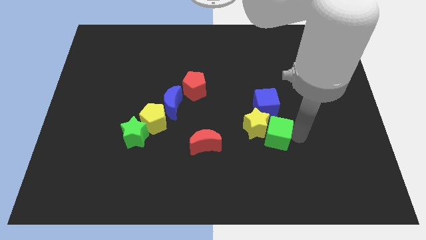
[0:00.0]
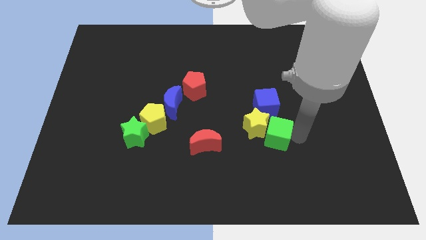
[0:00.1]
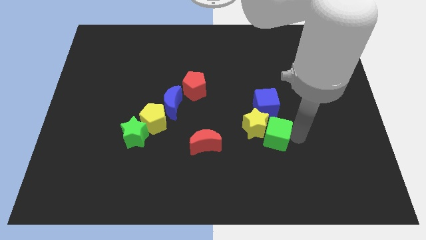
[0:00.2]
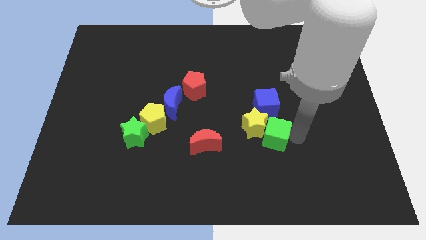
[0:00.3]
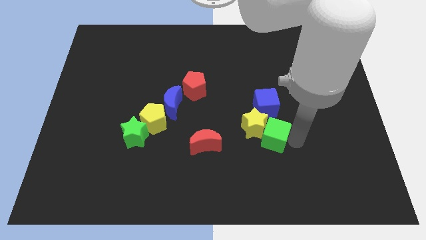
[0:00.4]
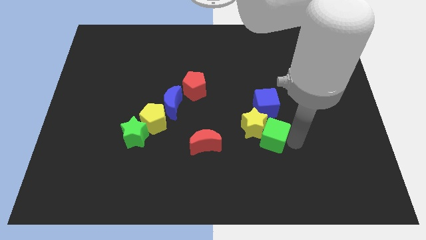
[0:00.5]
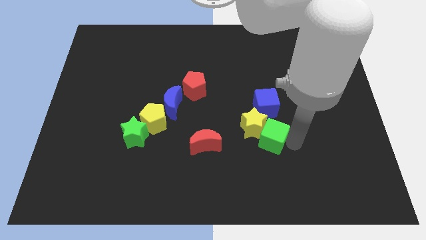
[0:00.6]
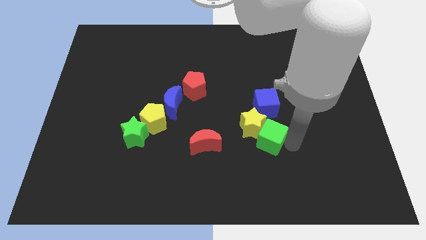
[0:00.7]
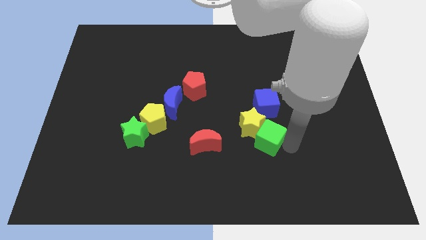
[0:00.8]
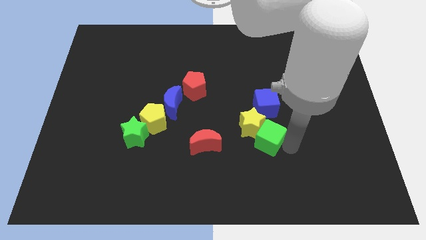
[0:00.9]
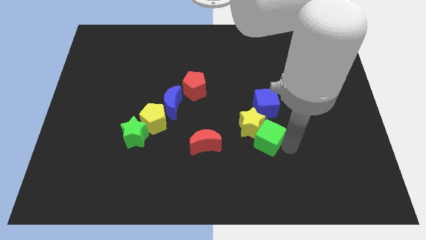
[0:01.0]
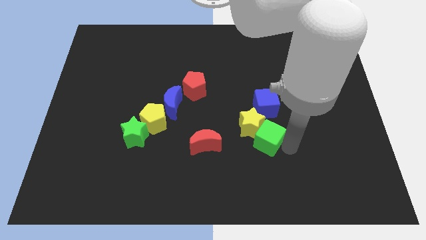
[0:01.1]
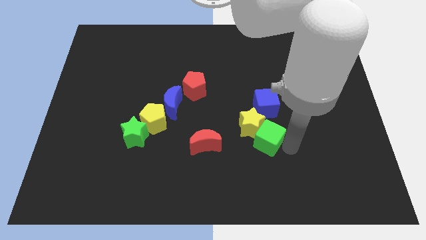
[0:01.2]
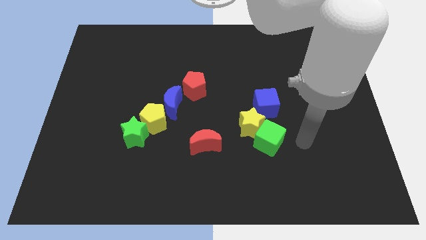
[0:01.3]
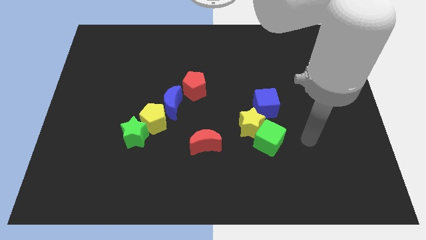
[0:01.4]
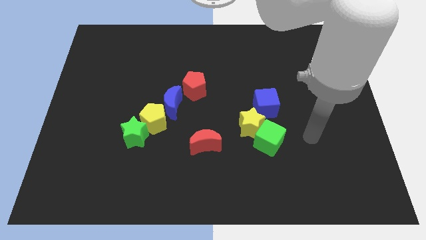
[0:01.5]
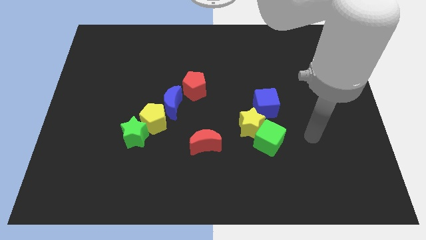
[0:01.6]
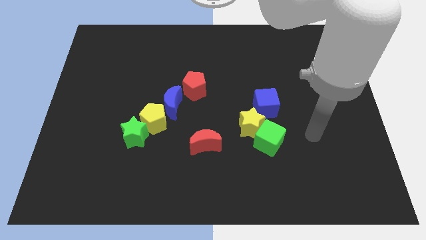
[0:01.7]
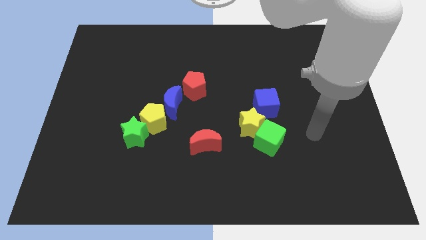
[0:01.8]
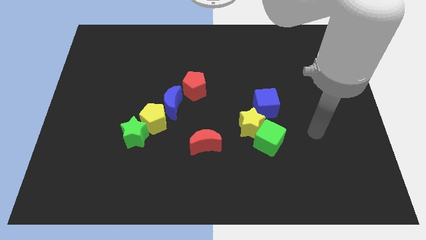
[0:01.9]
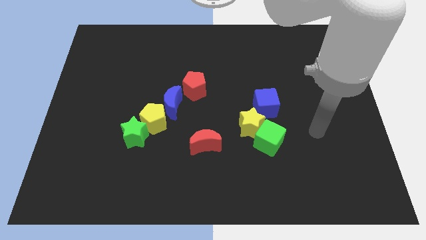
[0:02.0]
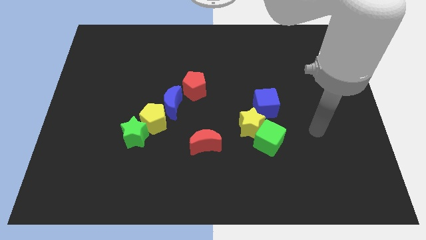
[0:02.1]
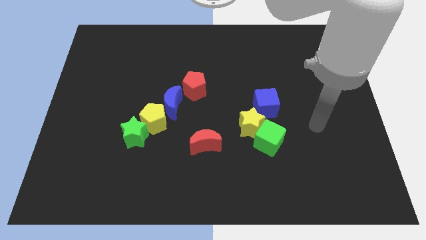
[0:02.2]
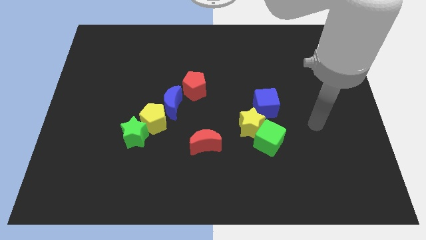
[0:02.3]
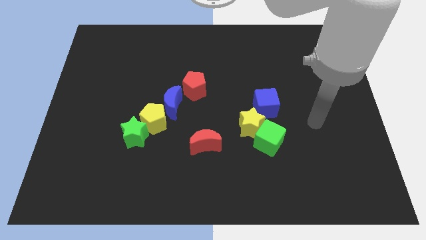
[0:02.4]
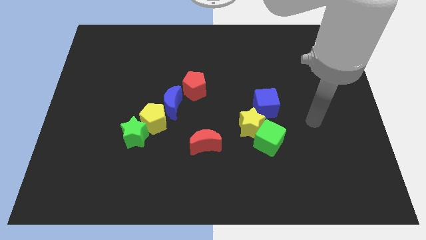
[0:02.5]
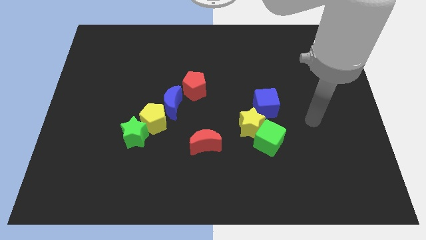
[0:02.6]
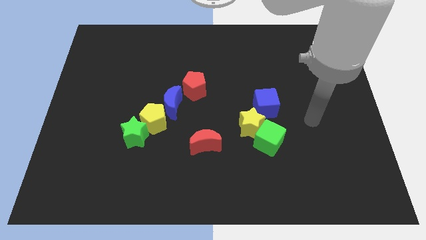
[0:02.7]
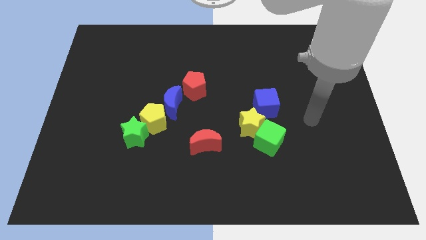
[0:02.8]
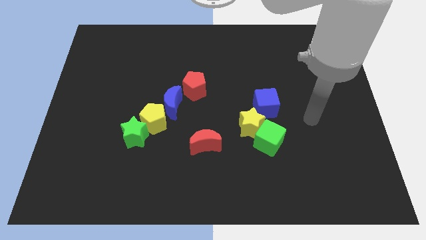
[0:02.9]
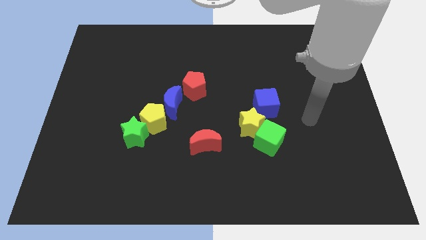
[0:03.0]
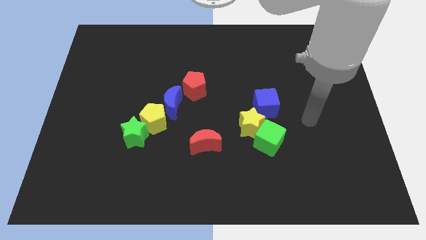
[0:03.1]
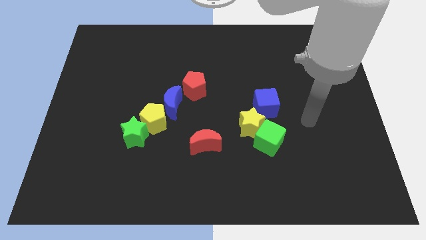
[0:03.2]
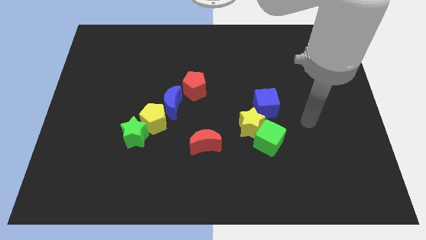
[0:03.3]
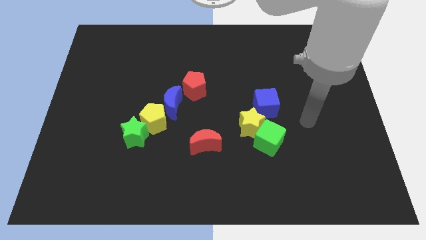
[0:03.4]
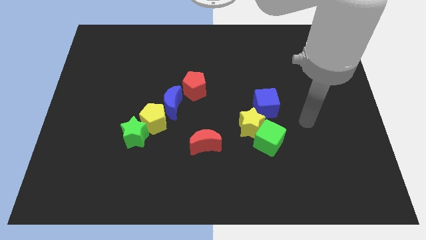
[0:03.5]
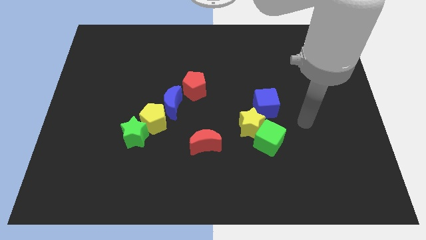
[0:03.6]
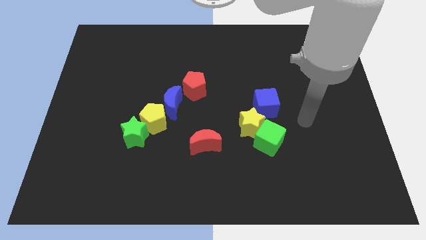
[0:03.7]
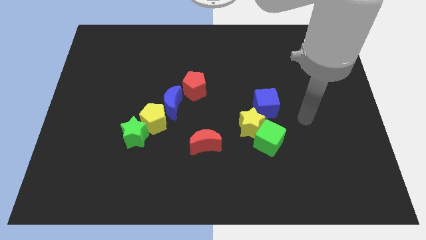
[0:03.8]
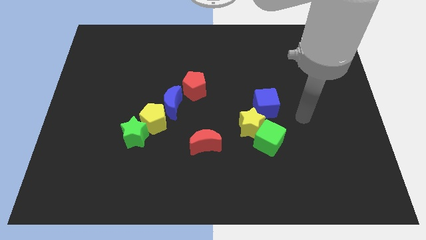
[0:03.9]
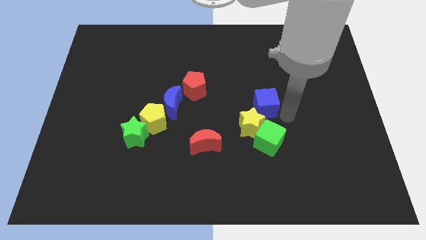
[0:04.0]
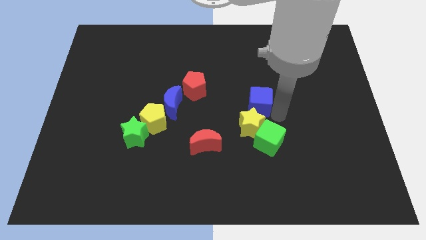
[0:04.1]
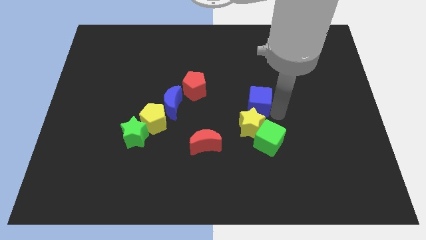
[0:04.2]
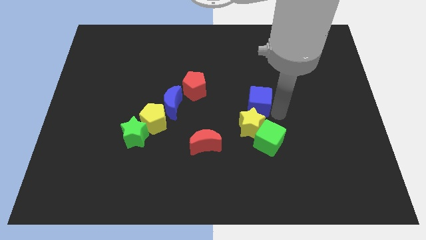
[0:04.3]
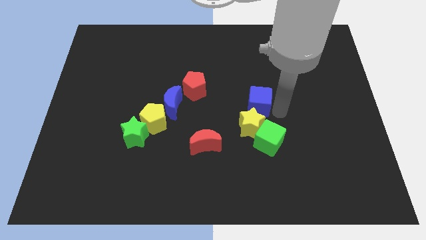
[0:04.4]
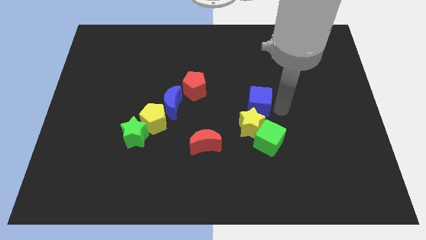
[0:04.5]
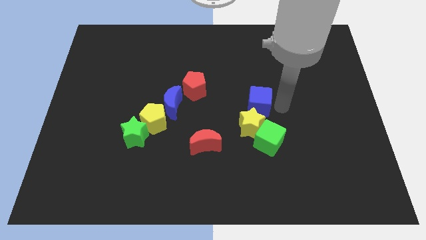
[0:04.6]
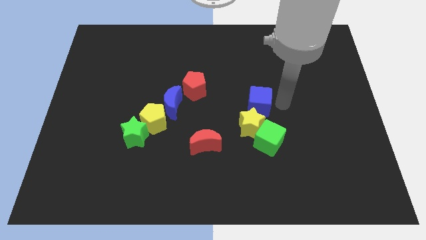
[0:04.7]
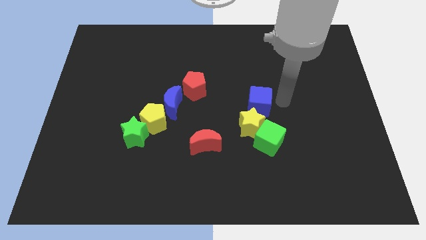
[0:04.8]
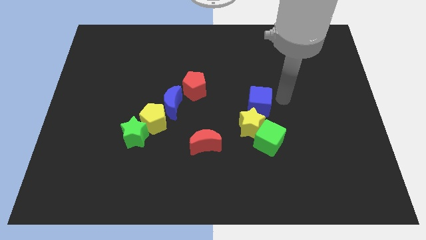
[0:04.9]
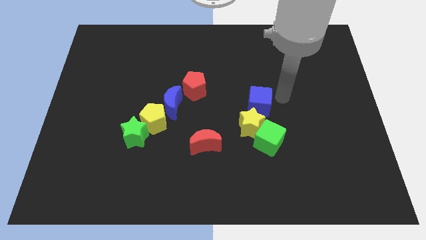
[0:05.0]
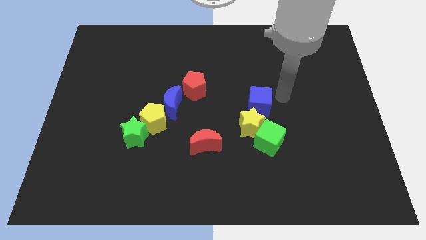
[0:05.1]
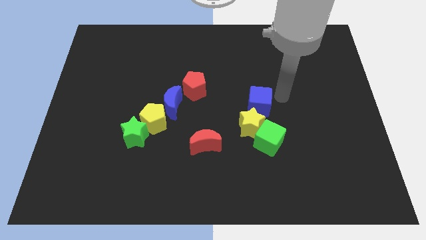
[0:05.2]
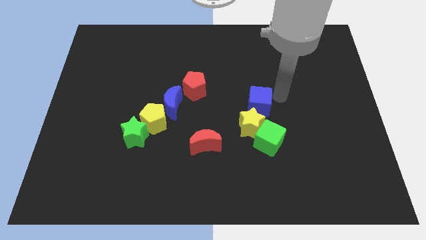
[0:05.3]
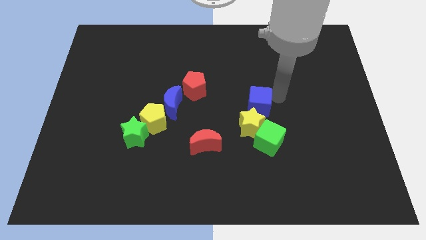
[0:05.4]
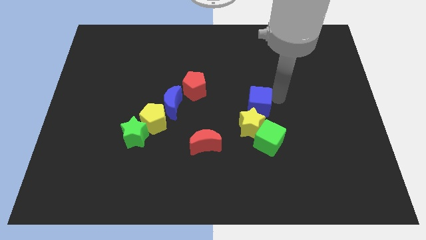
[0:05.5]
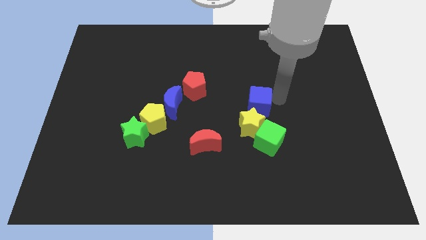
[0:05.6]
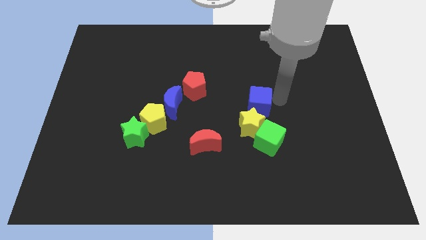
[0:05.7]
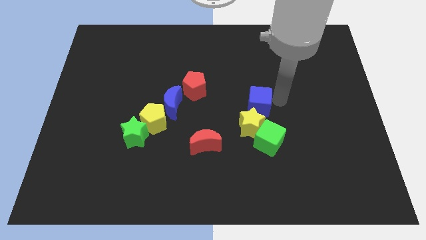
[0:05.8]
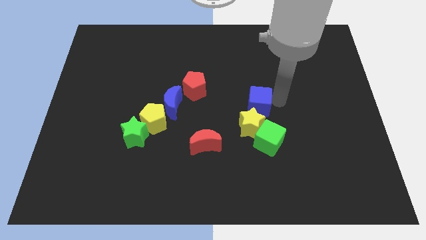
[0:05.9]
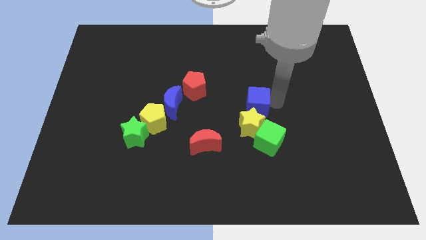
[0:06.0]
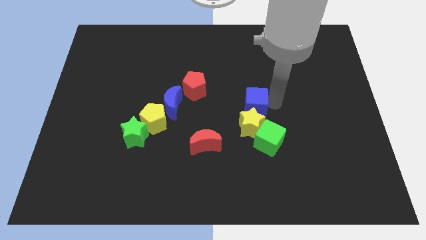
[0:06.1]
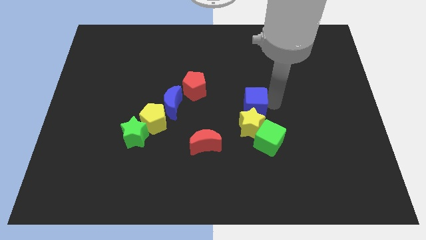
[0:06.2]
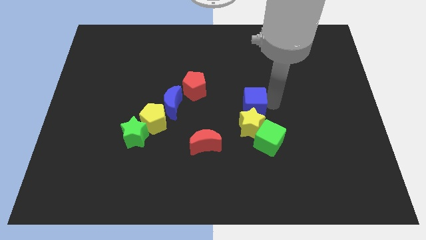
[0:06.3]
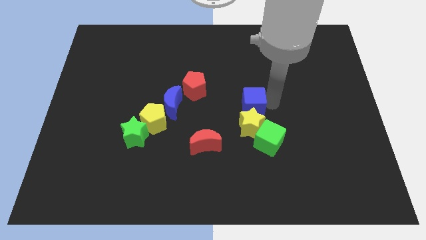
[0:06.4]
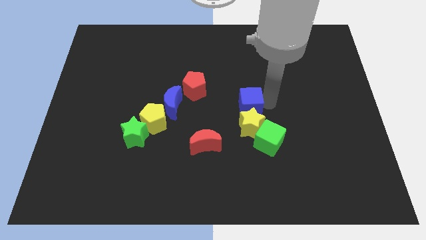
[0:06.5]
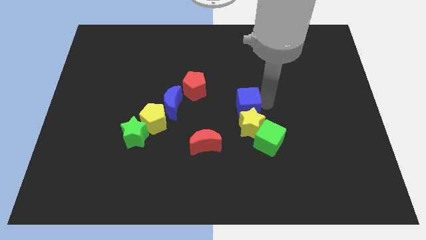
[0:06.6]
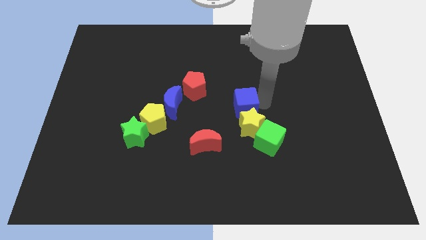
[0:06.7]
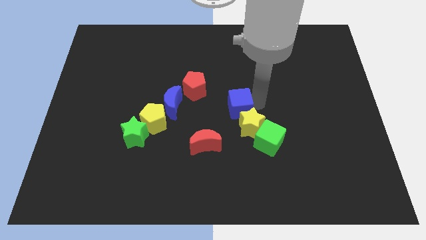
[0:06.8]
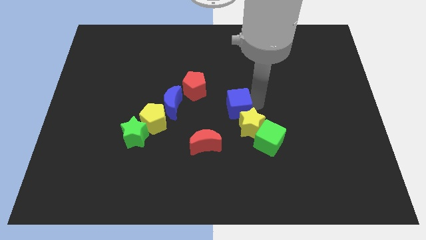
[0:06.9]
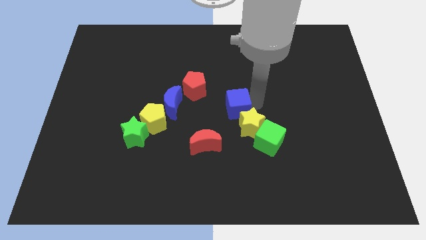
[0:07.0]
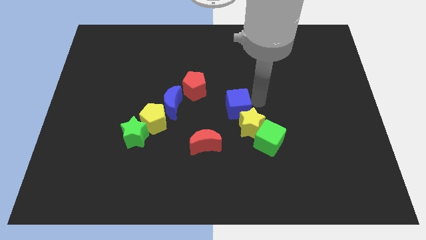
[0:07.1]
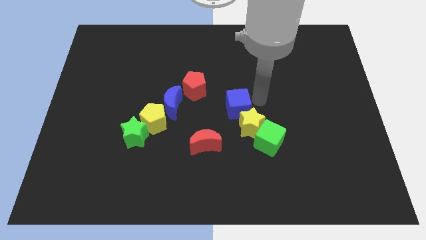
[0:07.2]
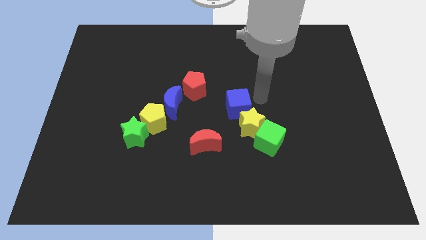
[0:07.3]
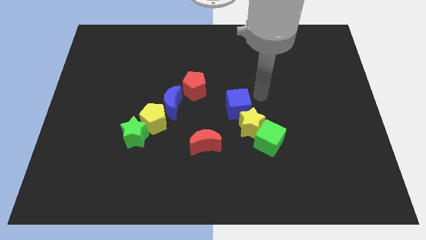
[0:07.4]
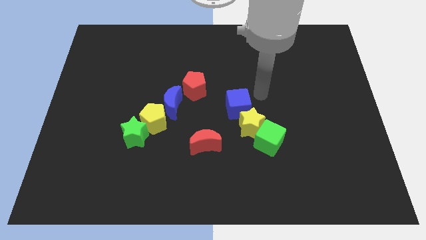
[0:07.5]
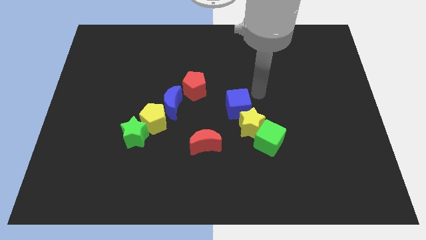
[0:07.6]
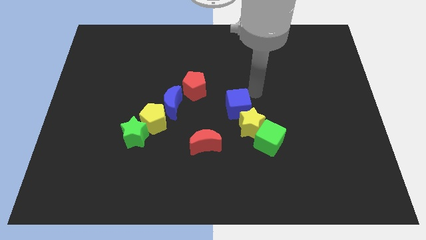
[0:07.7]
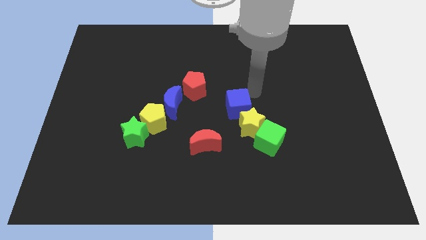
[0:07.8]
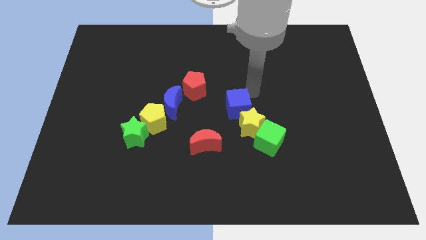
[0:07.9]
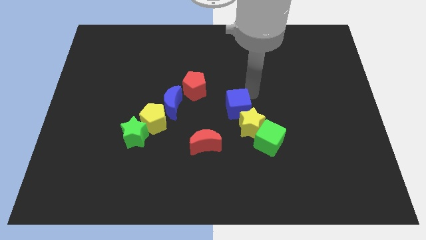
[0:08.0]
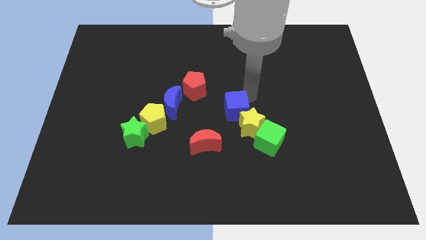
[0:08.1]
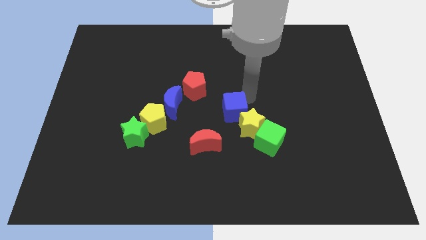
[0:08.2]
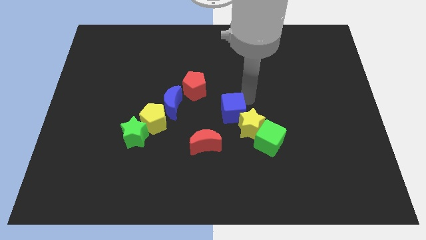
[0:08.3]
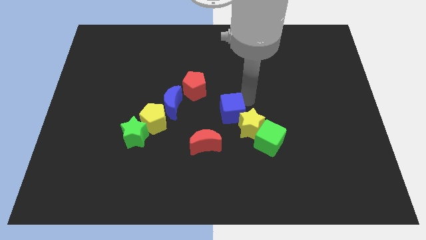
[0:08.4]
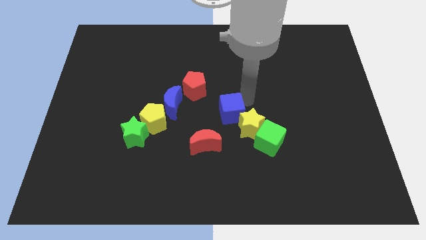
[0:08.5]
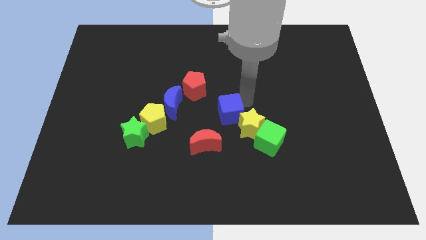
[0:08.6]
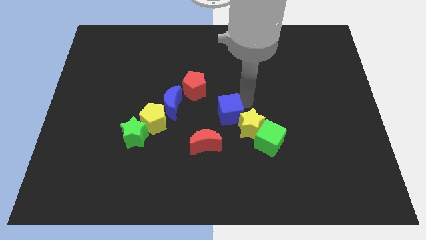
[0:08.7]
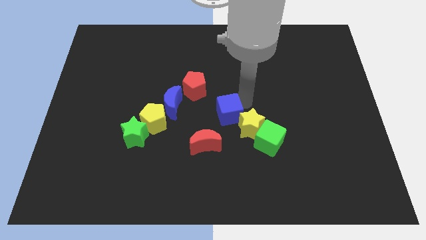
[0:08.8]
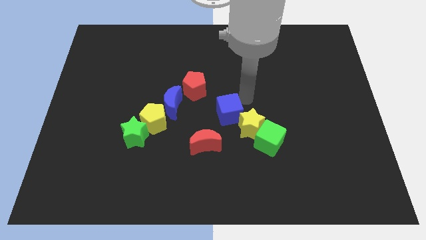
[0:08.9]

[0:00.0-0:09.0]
place the blue cube to the right of the blue crescent
